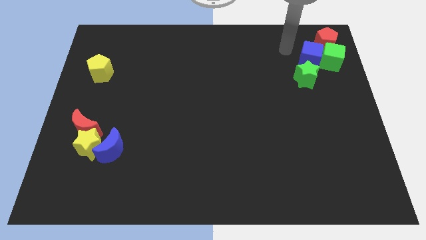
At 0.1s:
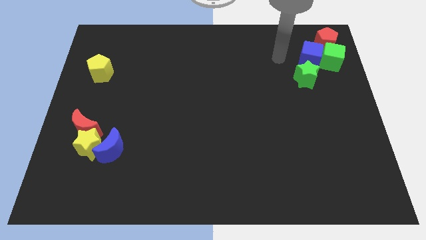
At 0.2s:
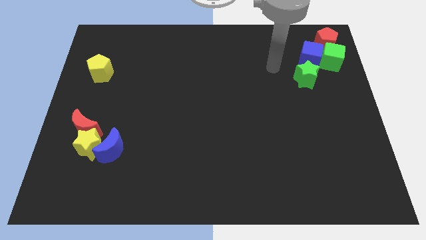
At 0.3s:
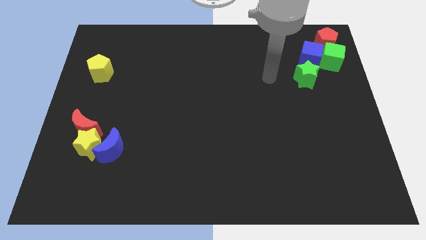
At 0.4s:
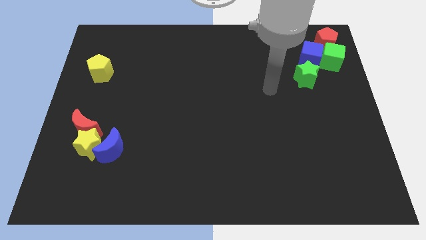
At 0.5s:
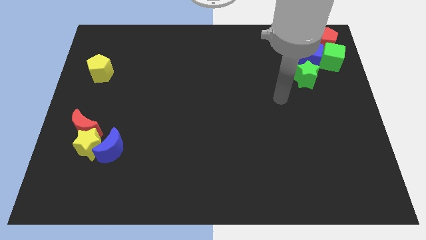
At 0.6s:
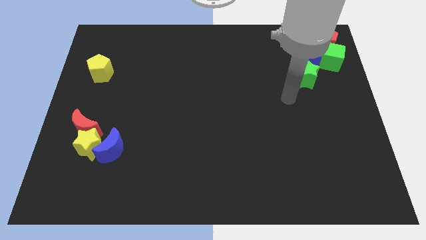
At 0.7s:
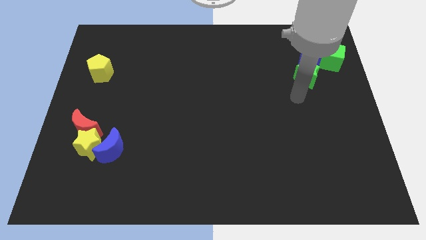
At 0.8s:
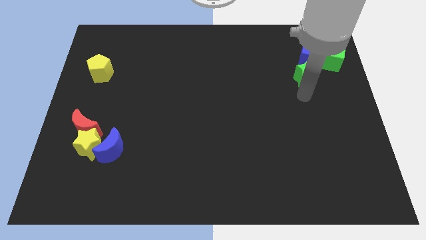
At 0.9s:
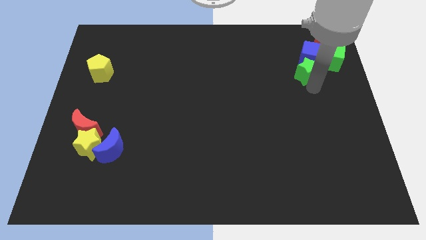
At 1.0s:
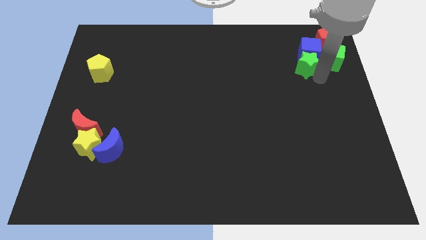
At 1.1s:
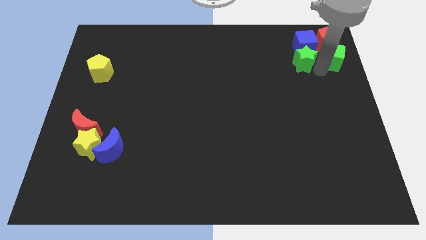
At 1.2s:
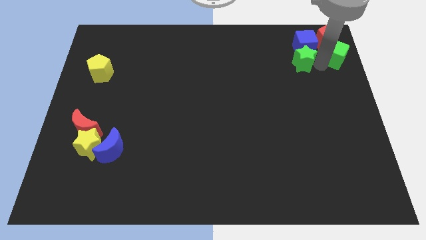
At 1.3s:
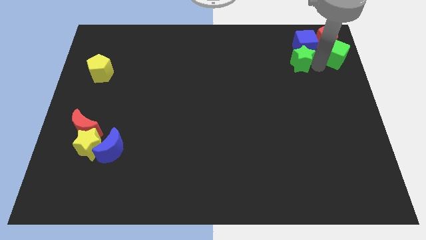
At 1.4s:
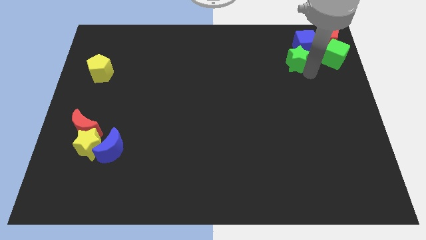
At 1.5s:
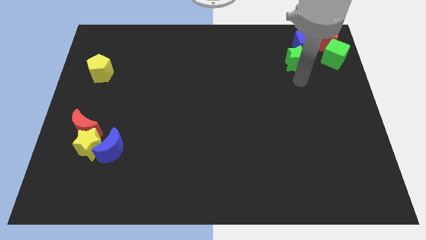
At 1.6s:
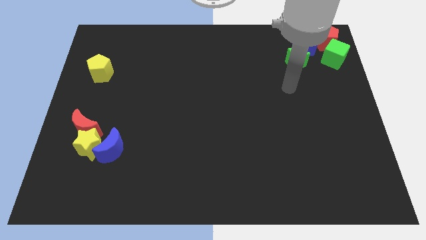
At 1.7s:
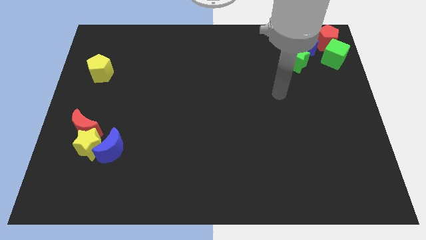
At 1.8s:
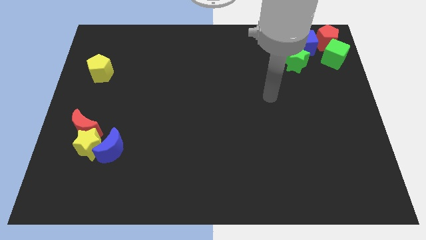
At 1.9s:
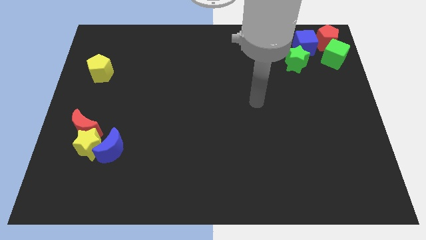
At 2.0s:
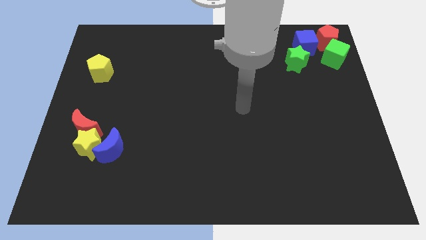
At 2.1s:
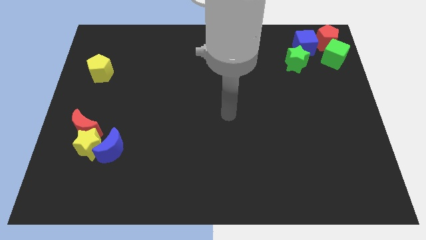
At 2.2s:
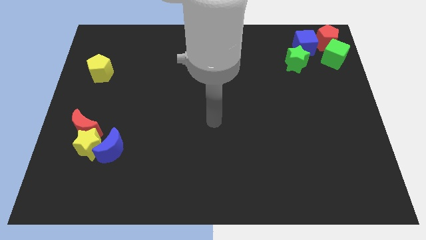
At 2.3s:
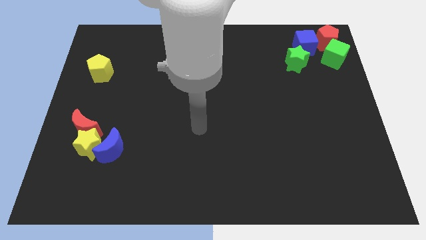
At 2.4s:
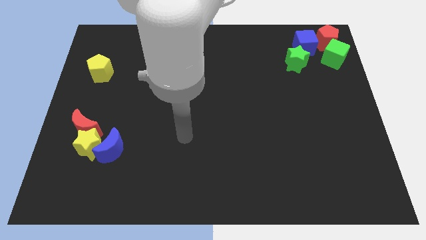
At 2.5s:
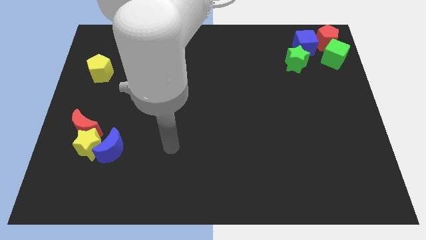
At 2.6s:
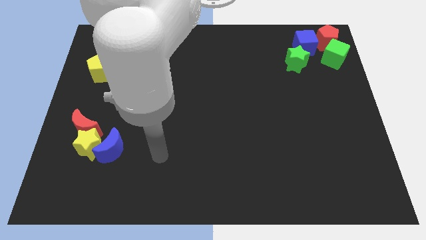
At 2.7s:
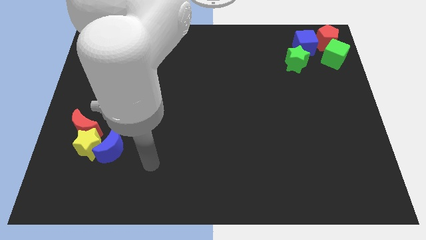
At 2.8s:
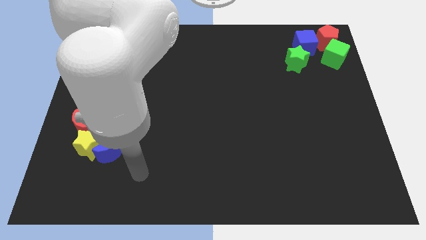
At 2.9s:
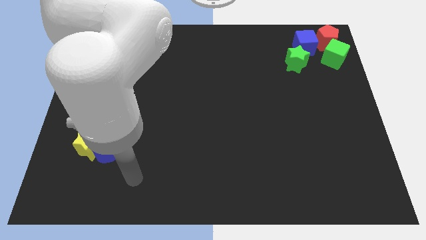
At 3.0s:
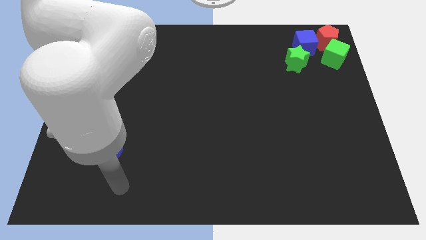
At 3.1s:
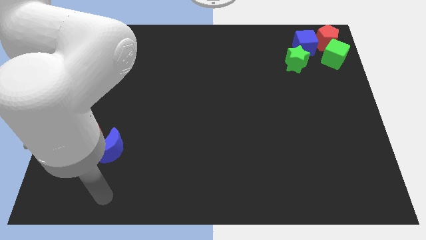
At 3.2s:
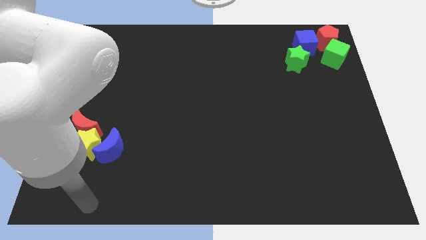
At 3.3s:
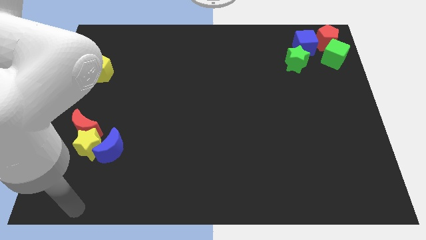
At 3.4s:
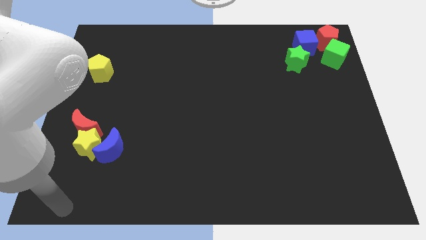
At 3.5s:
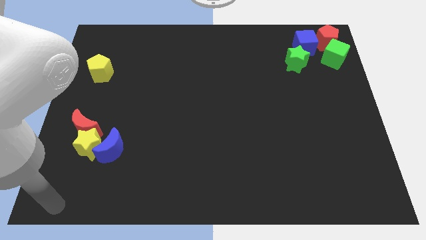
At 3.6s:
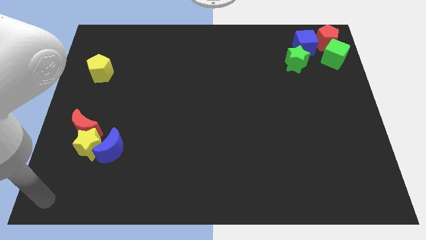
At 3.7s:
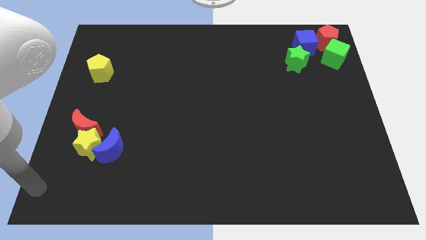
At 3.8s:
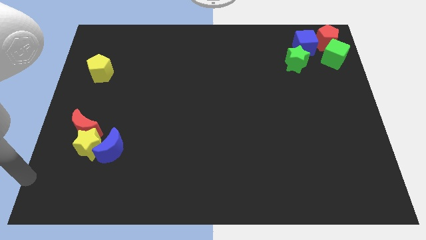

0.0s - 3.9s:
move the arm towards the bottom left corner

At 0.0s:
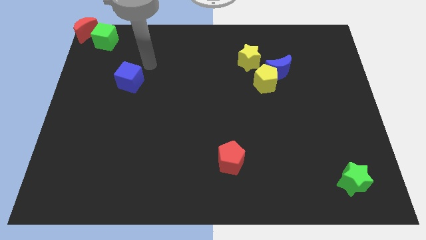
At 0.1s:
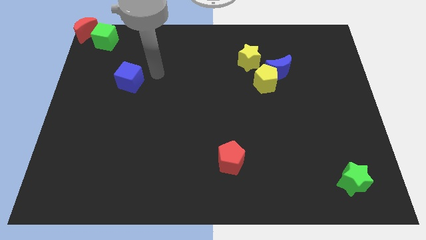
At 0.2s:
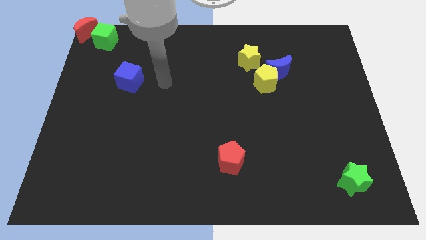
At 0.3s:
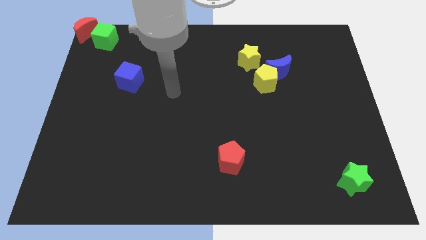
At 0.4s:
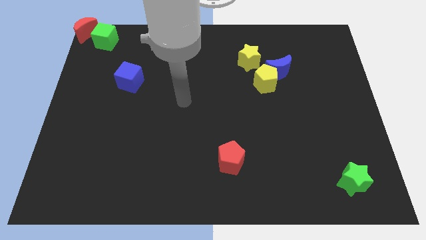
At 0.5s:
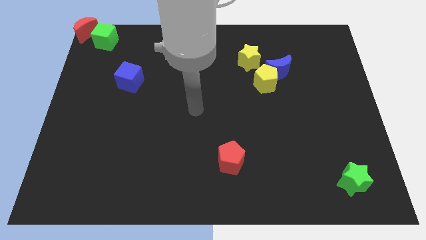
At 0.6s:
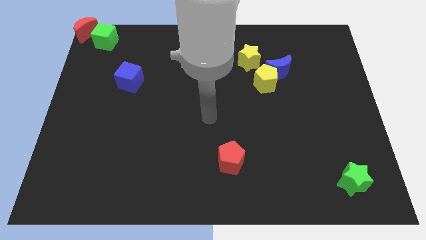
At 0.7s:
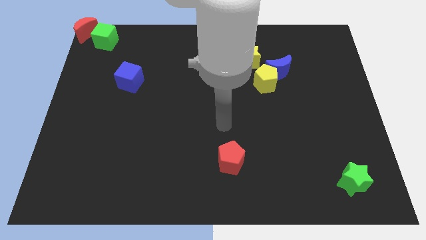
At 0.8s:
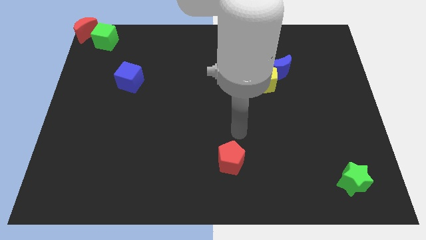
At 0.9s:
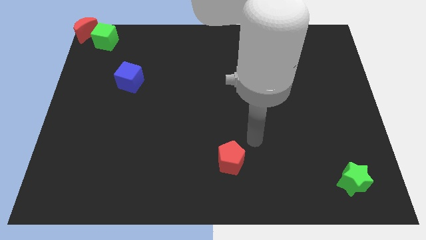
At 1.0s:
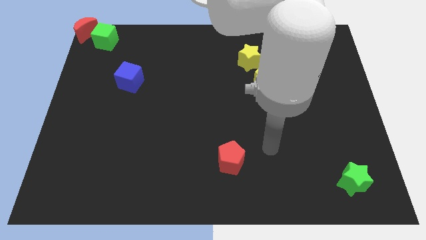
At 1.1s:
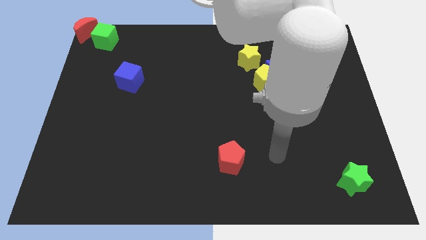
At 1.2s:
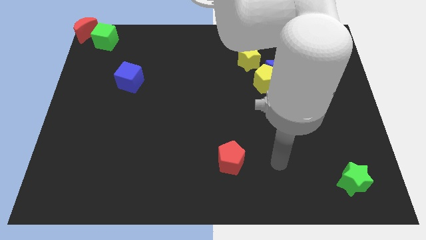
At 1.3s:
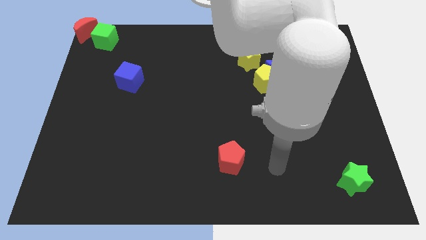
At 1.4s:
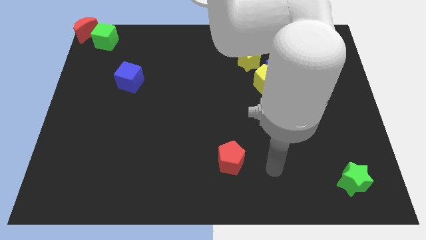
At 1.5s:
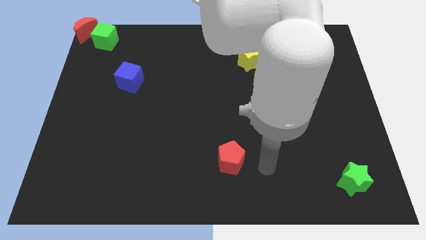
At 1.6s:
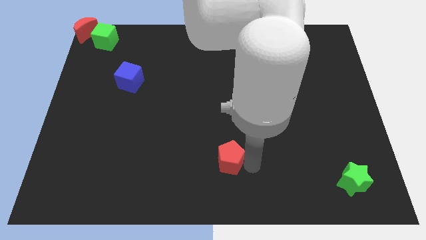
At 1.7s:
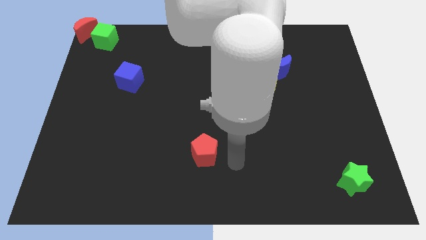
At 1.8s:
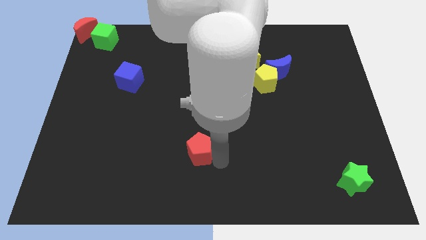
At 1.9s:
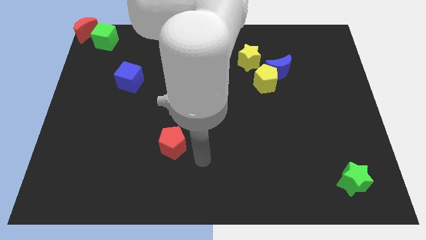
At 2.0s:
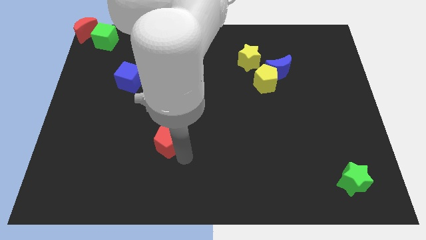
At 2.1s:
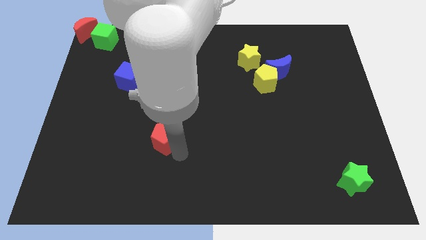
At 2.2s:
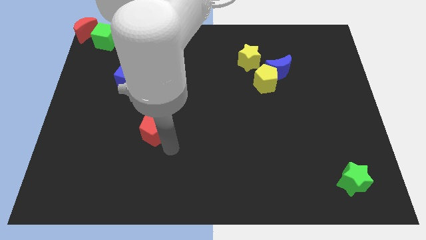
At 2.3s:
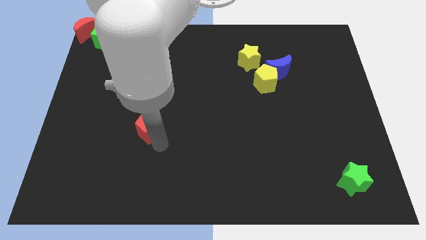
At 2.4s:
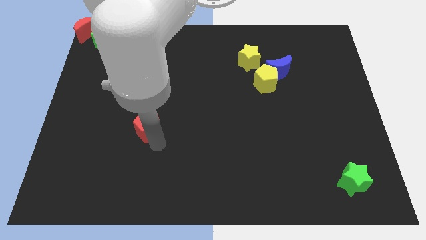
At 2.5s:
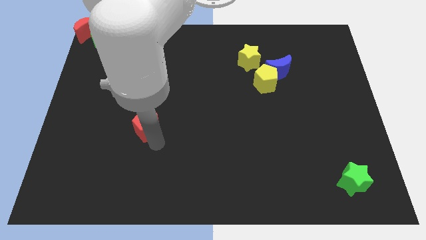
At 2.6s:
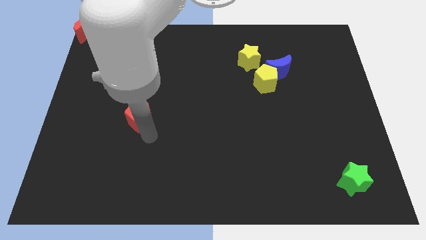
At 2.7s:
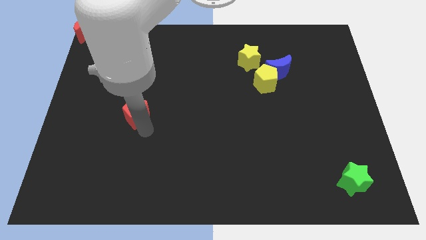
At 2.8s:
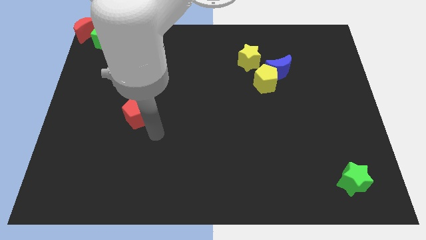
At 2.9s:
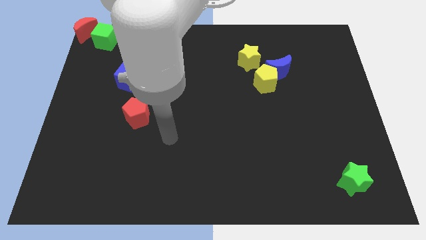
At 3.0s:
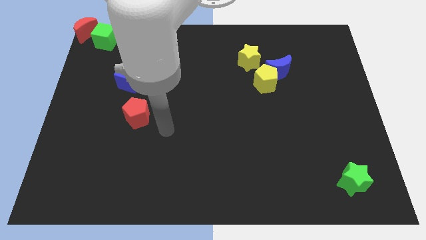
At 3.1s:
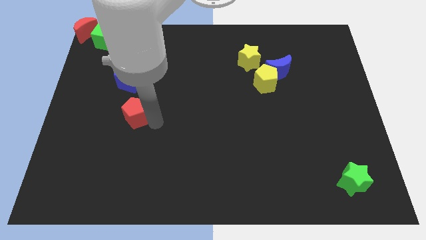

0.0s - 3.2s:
place the red pentagon left to the yellow pentagon

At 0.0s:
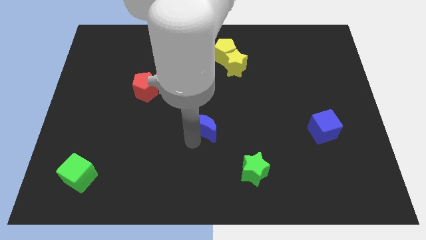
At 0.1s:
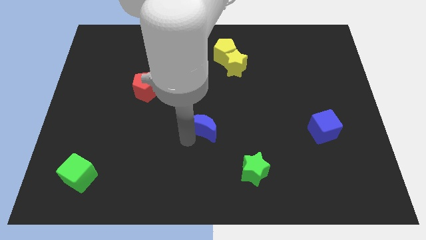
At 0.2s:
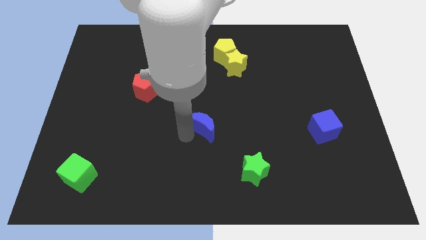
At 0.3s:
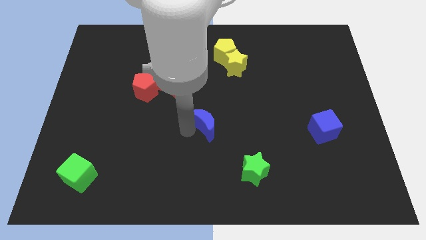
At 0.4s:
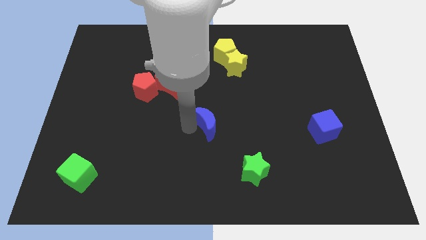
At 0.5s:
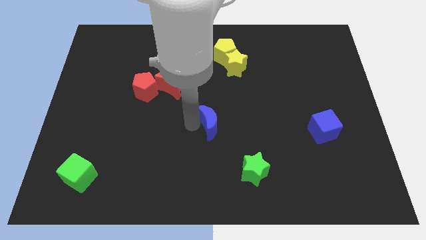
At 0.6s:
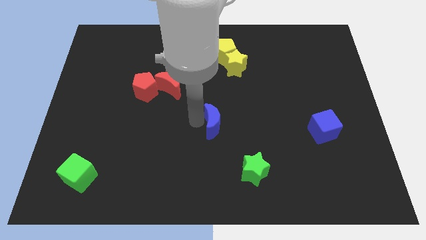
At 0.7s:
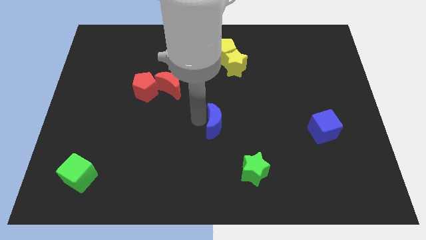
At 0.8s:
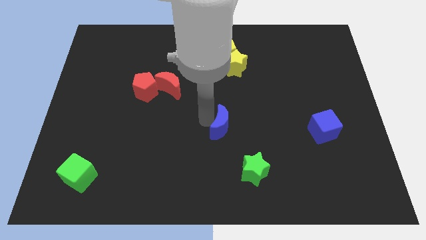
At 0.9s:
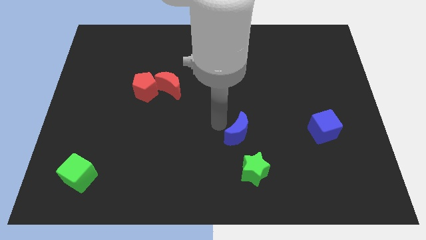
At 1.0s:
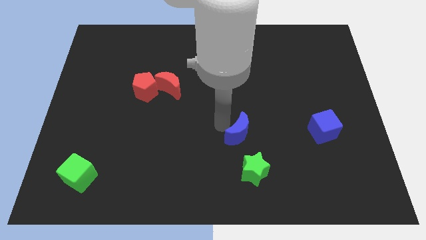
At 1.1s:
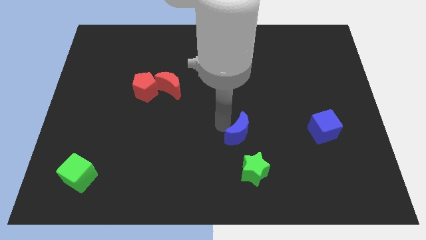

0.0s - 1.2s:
push the blue moon diagonally top left to the green star

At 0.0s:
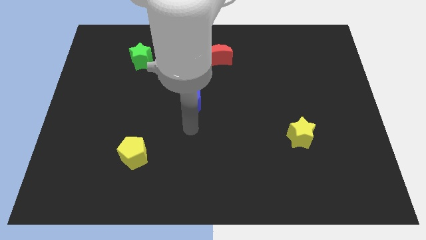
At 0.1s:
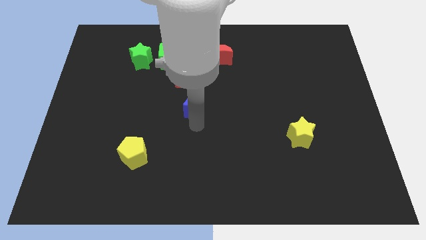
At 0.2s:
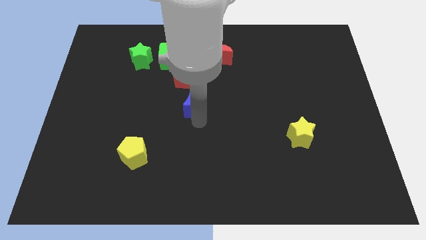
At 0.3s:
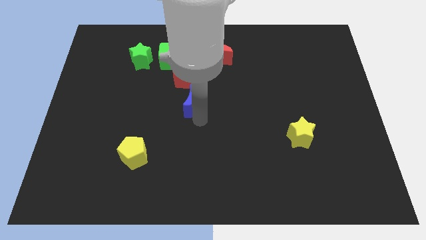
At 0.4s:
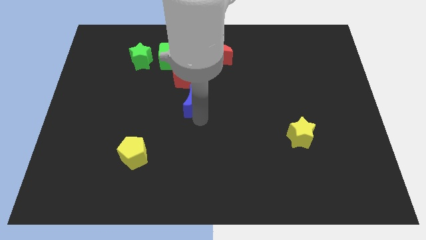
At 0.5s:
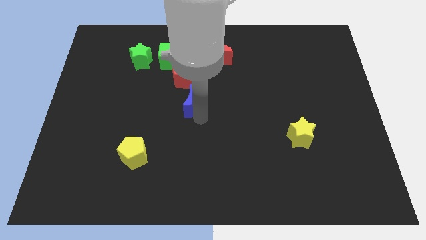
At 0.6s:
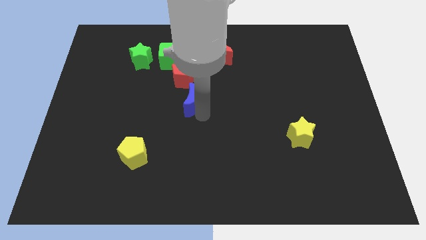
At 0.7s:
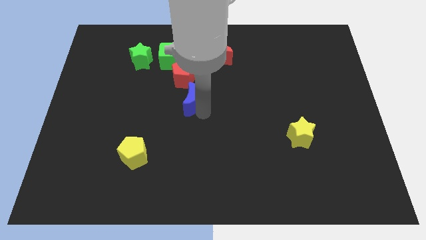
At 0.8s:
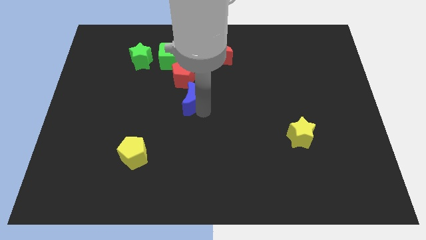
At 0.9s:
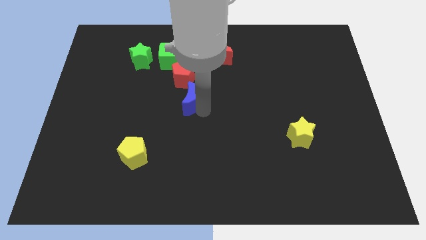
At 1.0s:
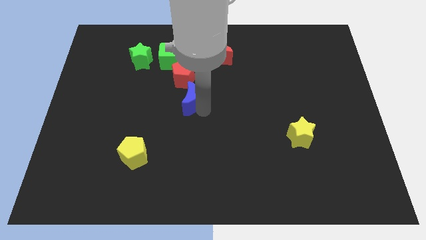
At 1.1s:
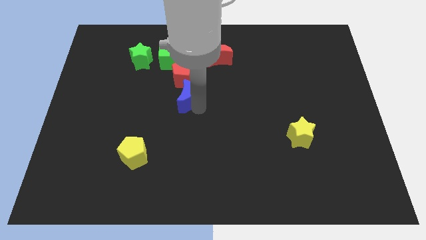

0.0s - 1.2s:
move the blue crescent to the bottom of the red pentagon
